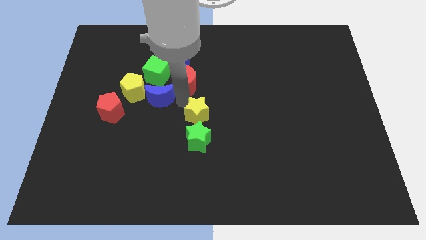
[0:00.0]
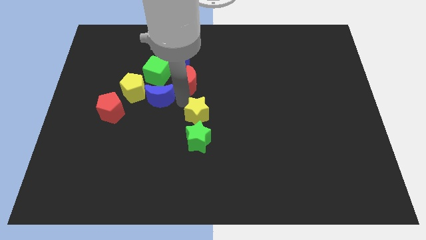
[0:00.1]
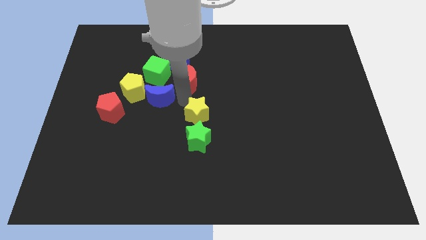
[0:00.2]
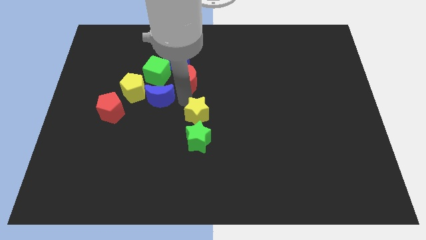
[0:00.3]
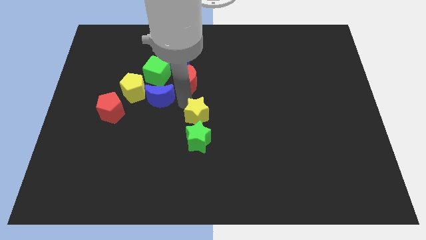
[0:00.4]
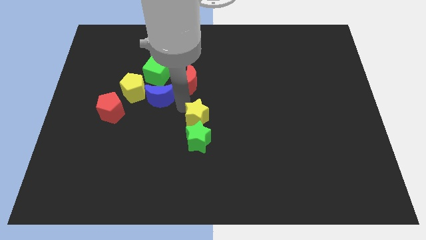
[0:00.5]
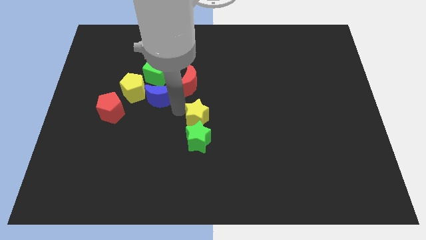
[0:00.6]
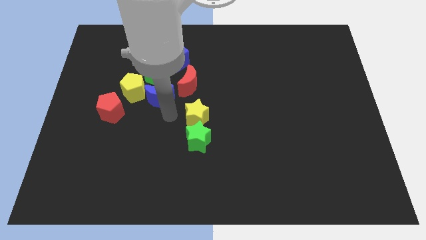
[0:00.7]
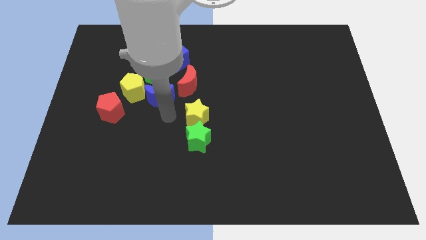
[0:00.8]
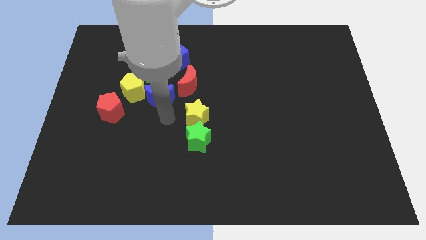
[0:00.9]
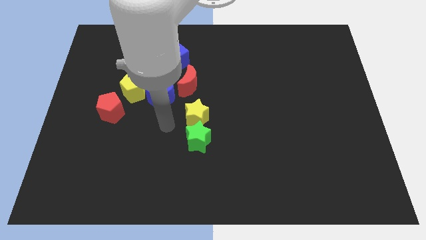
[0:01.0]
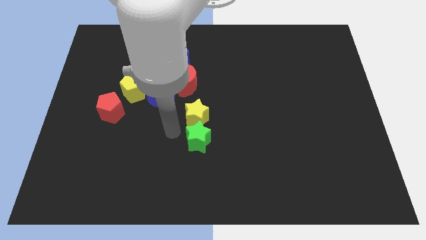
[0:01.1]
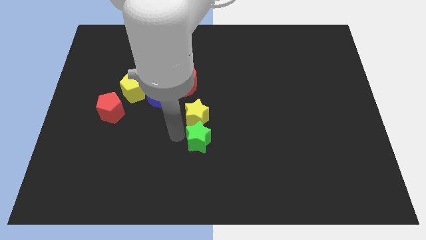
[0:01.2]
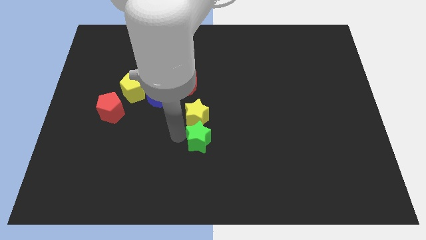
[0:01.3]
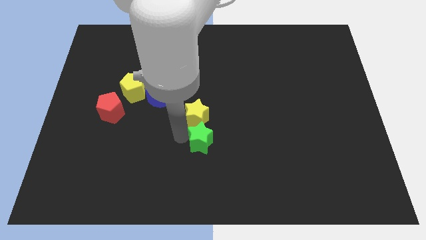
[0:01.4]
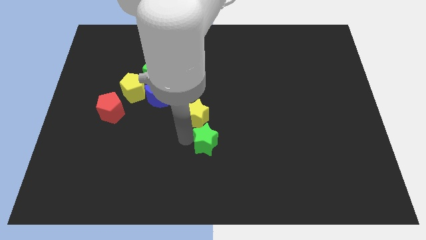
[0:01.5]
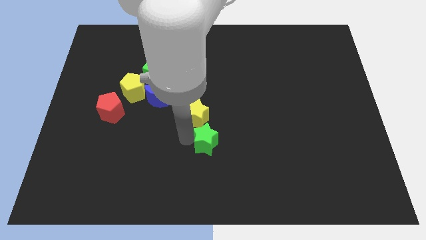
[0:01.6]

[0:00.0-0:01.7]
move your arm to the left side of the green star

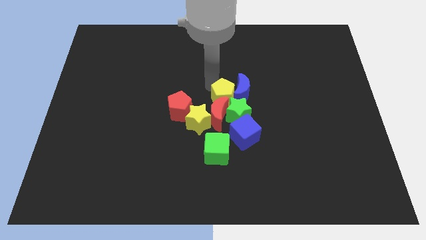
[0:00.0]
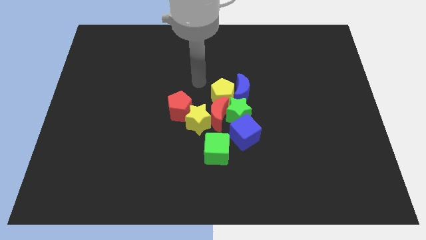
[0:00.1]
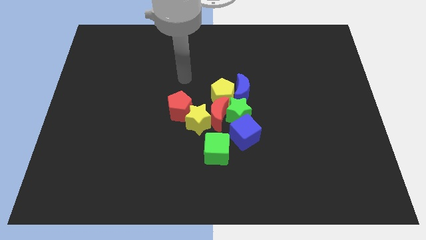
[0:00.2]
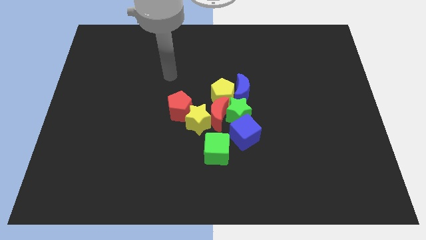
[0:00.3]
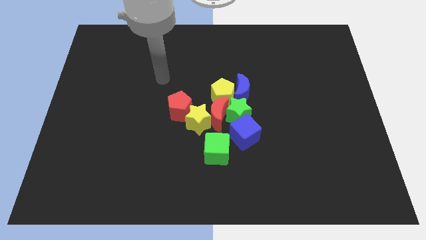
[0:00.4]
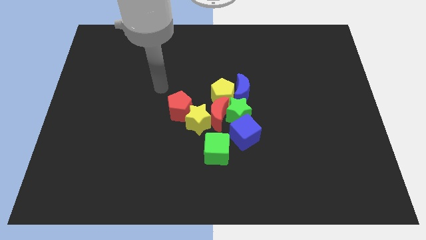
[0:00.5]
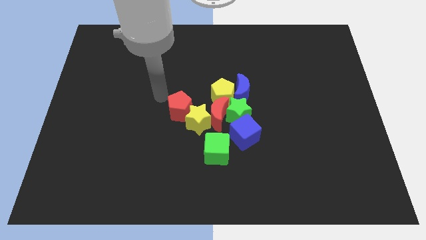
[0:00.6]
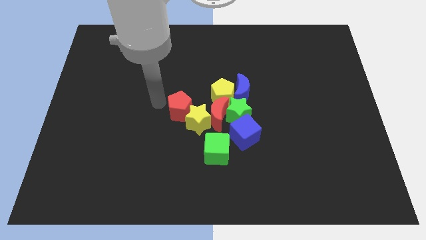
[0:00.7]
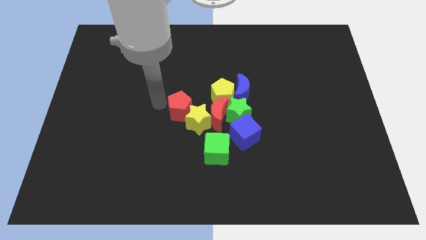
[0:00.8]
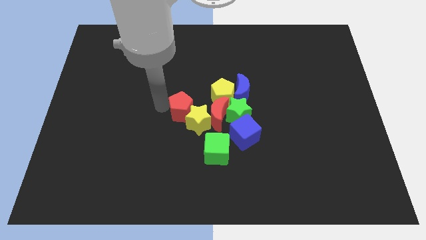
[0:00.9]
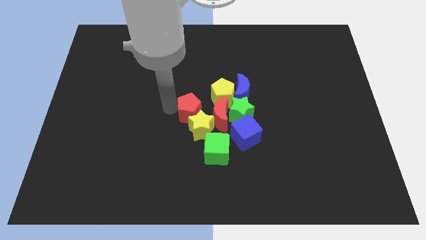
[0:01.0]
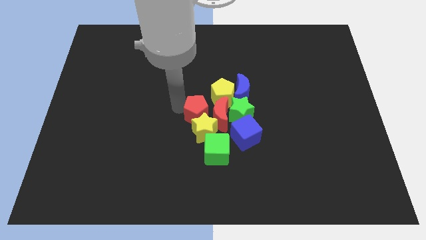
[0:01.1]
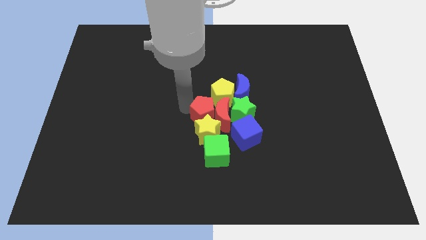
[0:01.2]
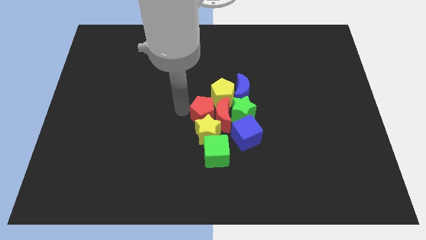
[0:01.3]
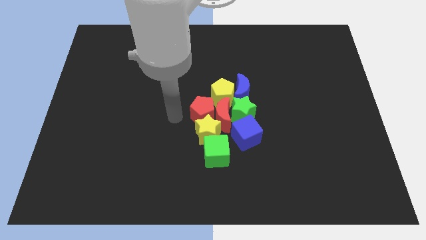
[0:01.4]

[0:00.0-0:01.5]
move the red pentagon into the red moon

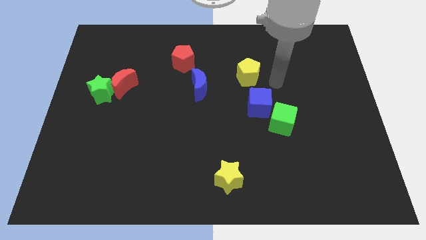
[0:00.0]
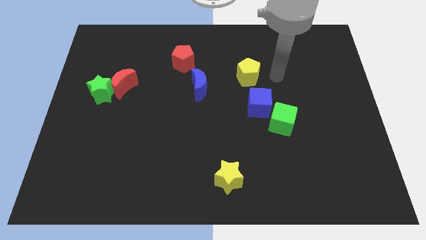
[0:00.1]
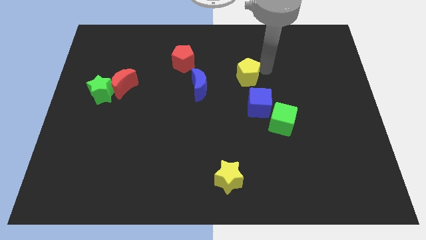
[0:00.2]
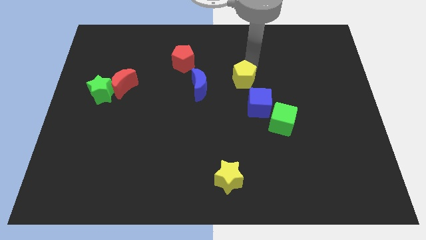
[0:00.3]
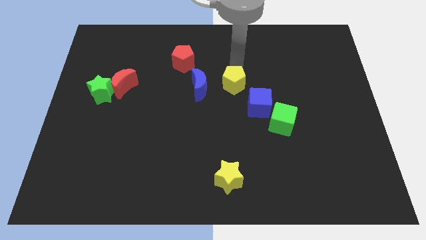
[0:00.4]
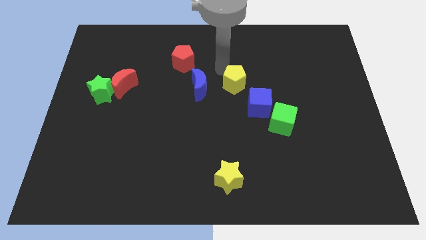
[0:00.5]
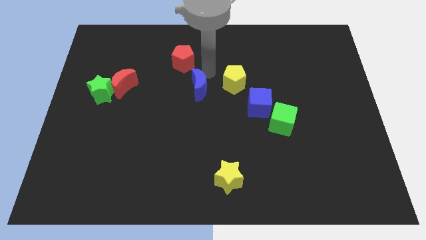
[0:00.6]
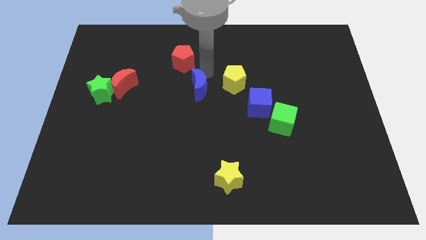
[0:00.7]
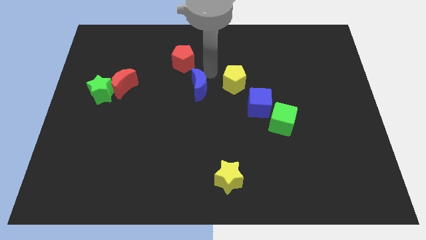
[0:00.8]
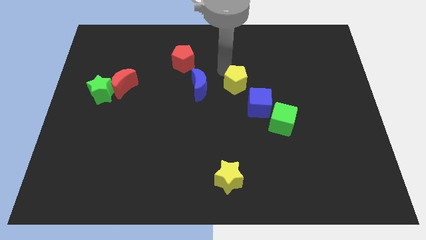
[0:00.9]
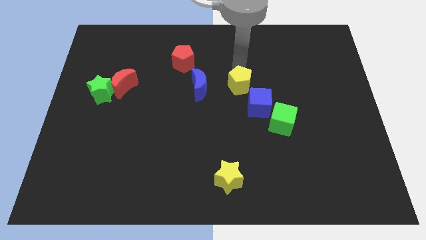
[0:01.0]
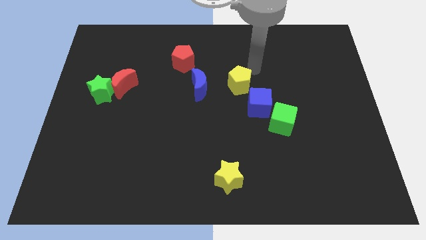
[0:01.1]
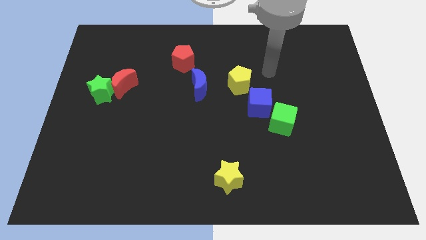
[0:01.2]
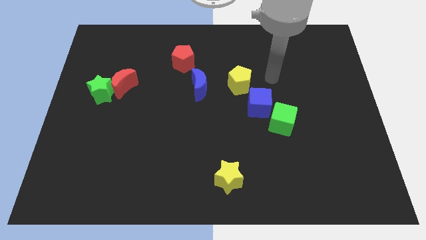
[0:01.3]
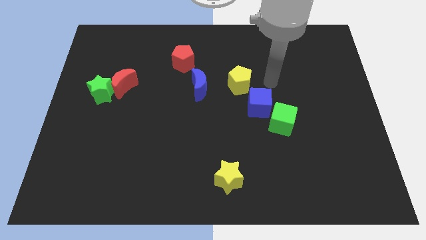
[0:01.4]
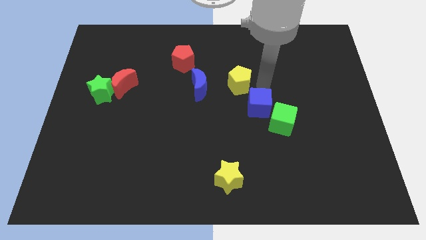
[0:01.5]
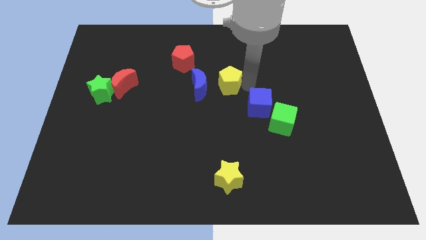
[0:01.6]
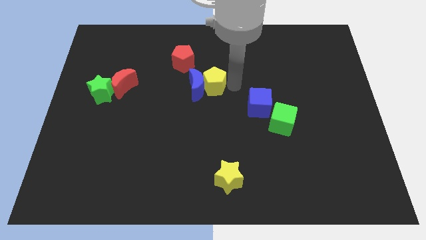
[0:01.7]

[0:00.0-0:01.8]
push the yellow pentagon to the right of the blue crescent

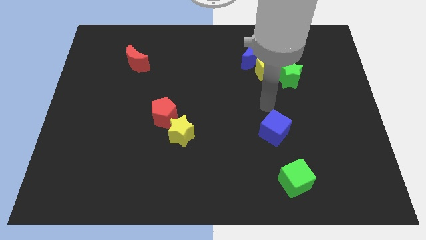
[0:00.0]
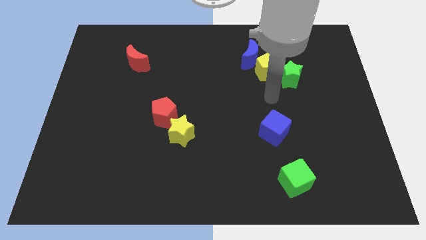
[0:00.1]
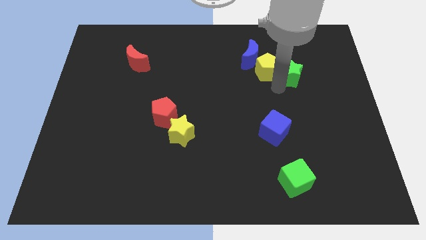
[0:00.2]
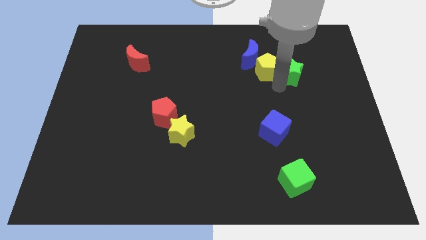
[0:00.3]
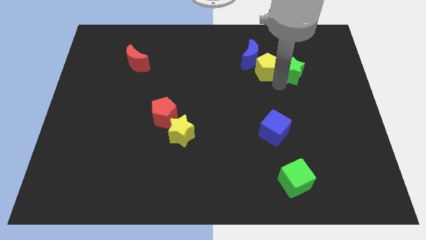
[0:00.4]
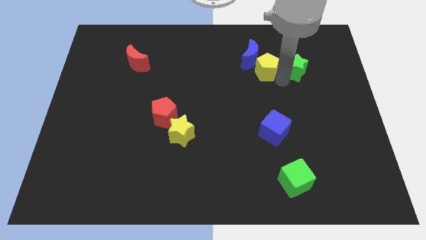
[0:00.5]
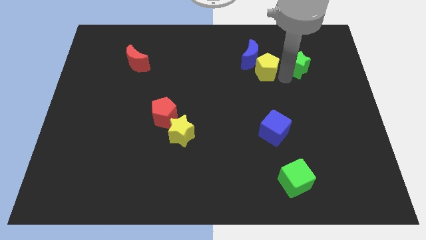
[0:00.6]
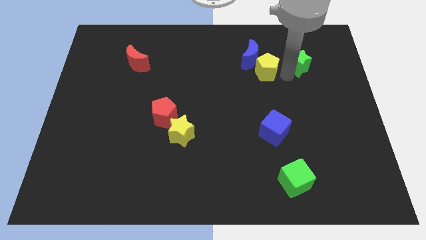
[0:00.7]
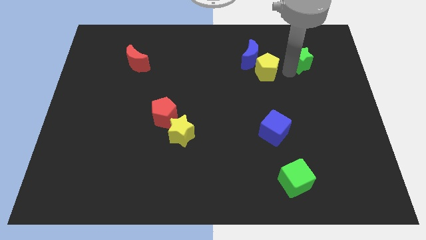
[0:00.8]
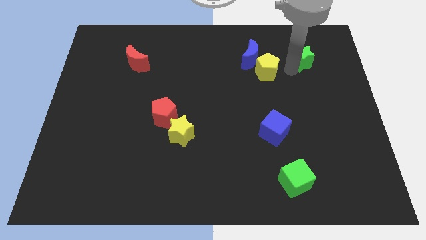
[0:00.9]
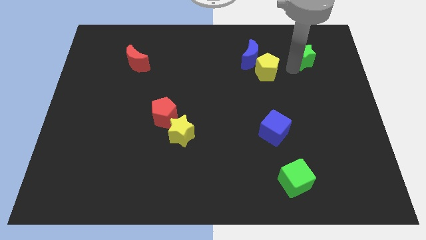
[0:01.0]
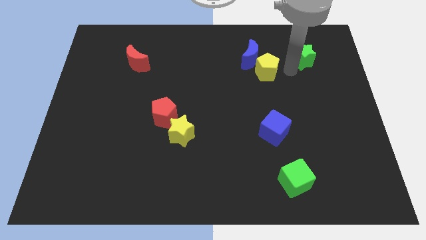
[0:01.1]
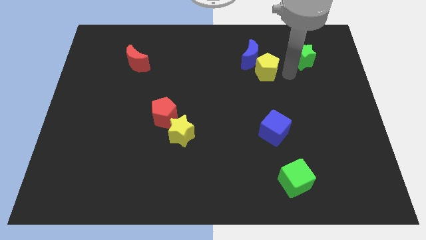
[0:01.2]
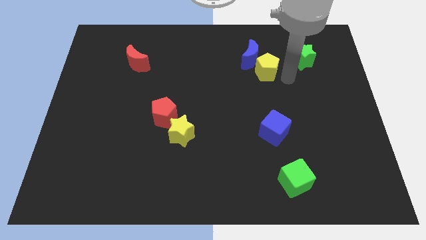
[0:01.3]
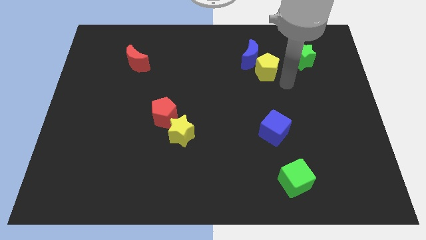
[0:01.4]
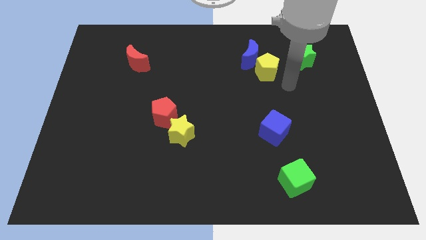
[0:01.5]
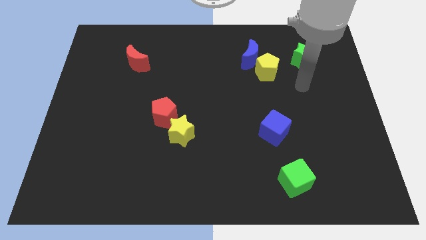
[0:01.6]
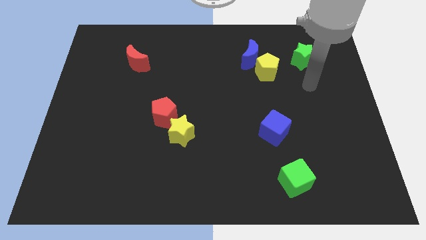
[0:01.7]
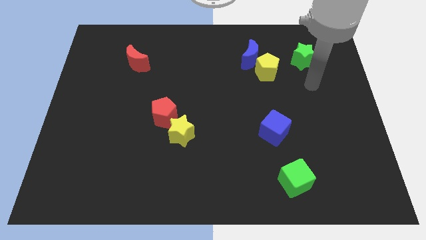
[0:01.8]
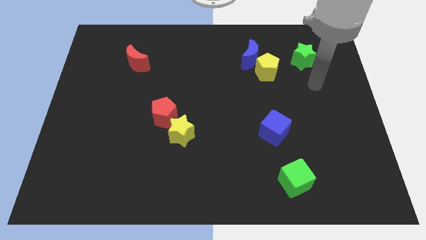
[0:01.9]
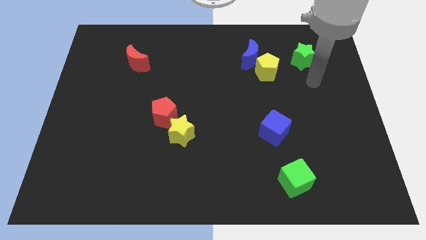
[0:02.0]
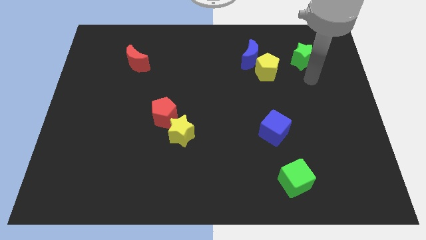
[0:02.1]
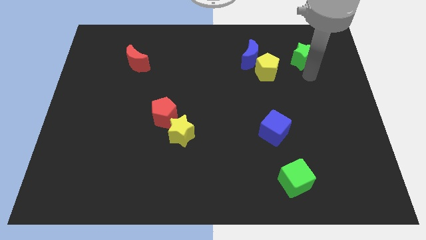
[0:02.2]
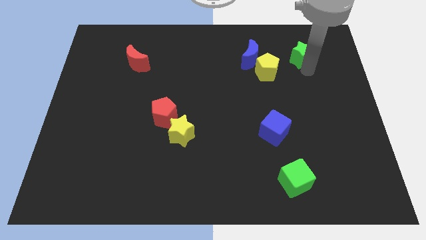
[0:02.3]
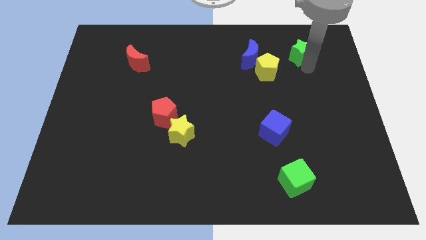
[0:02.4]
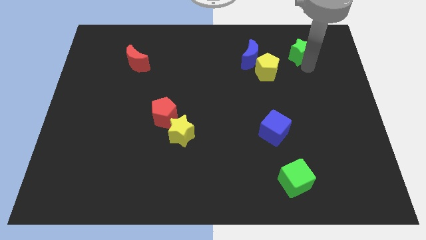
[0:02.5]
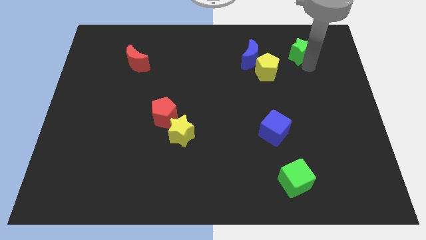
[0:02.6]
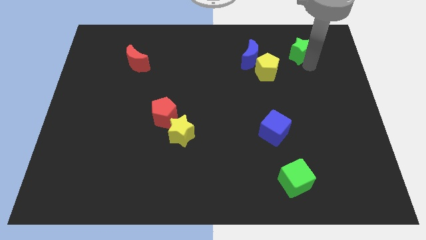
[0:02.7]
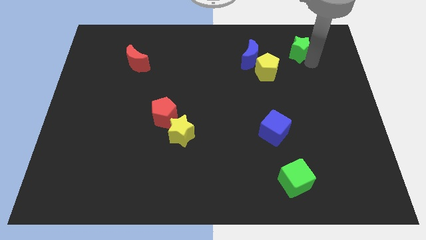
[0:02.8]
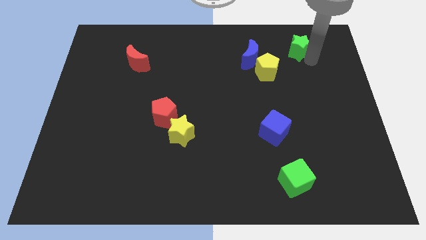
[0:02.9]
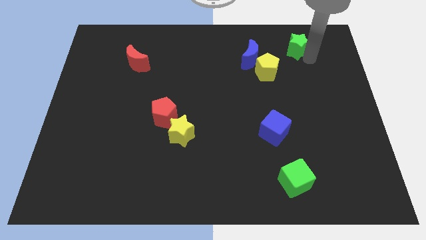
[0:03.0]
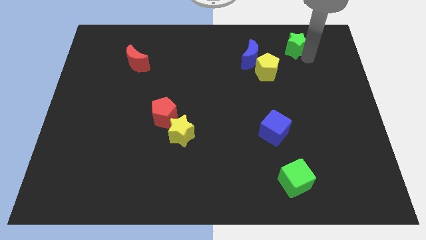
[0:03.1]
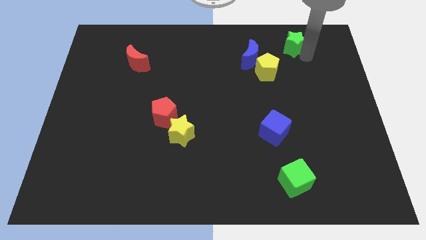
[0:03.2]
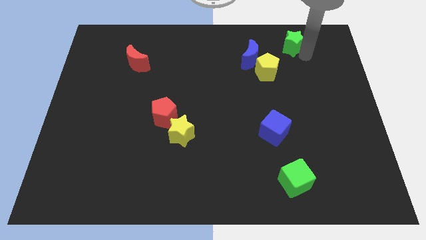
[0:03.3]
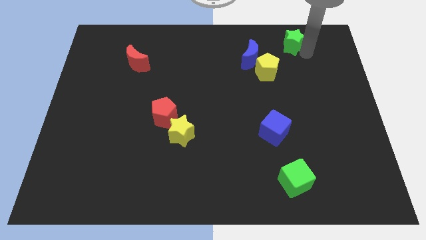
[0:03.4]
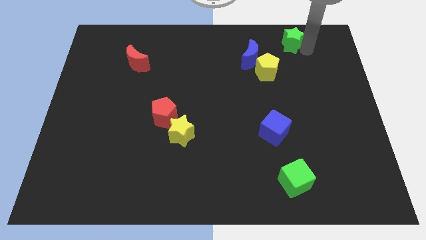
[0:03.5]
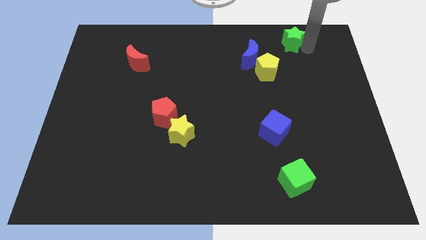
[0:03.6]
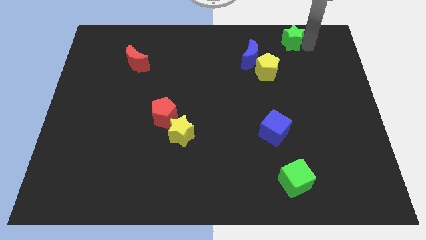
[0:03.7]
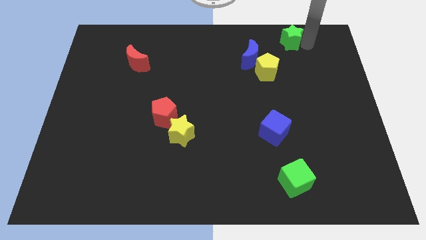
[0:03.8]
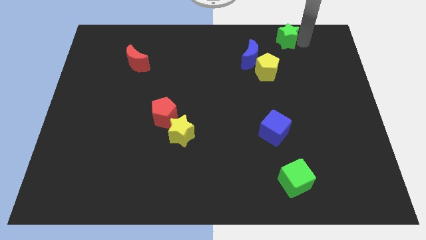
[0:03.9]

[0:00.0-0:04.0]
push the green star towards the top of the board
